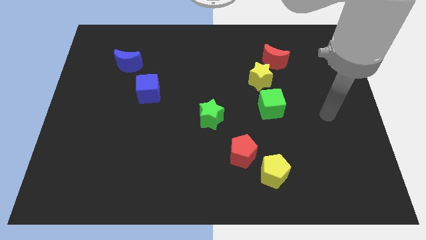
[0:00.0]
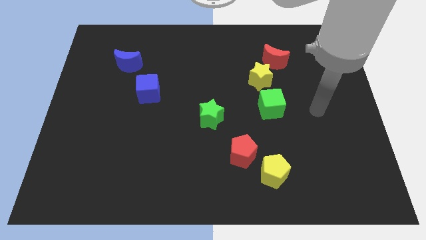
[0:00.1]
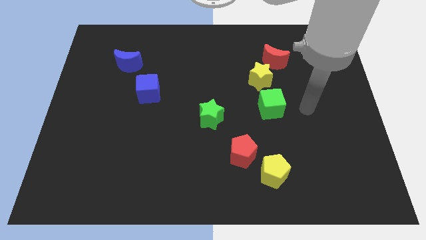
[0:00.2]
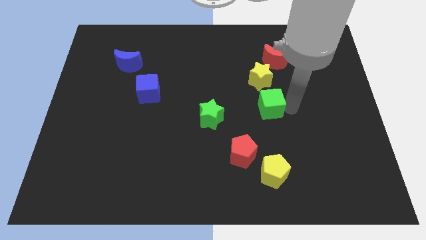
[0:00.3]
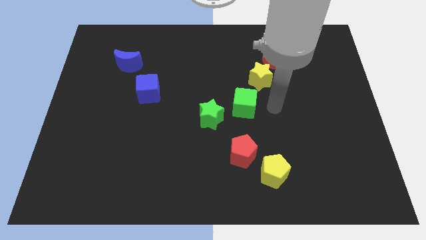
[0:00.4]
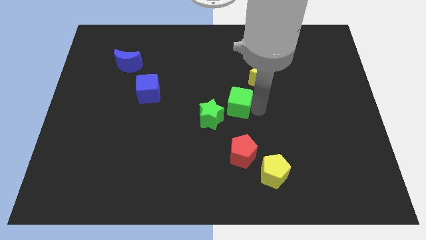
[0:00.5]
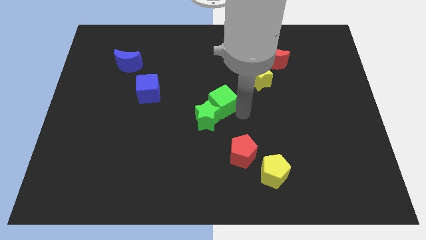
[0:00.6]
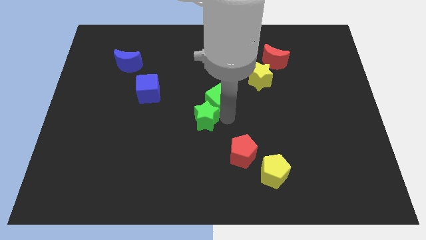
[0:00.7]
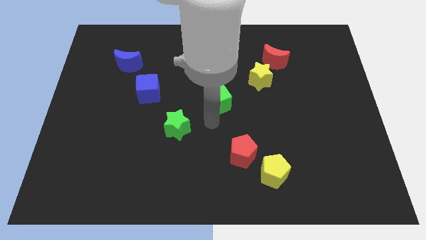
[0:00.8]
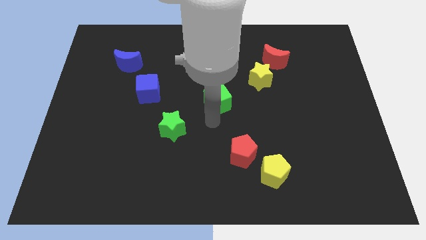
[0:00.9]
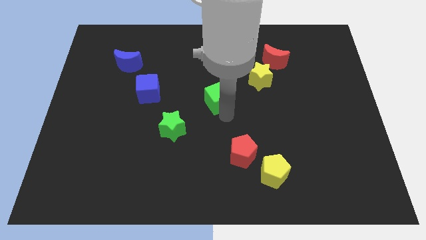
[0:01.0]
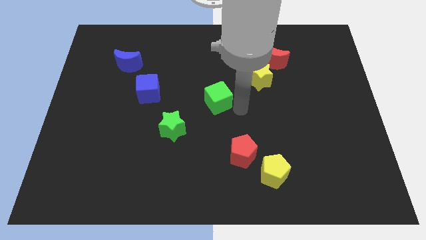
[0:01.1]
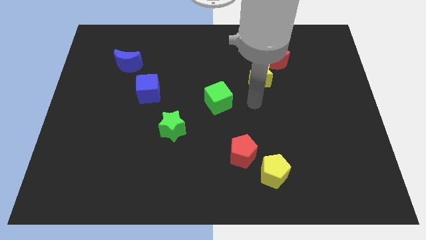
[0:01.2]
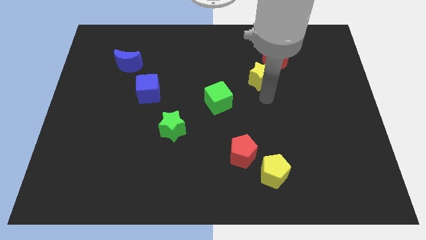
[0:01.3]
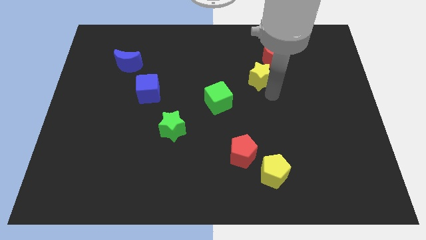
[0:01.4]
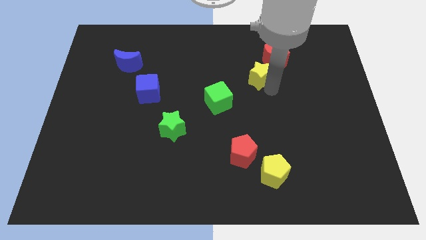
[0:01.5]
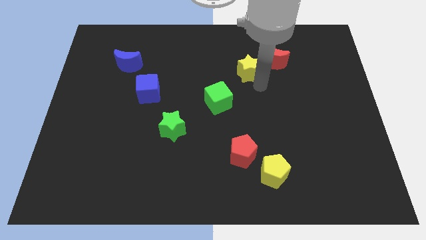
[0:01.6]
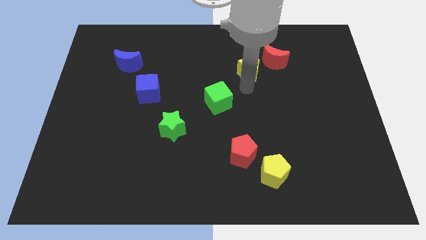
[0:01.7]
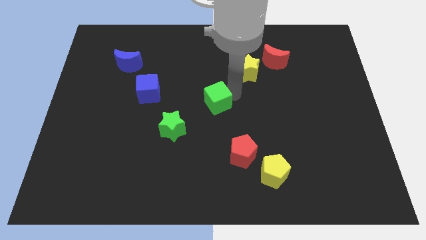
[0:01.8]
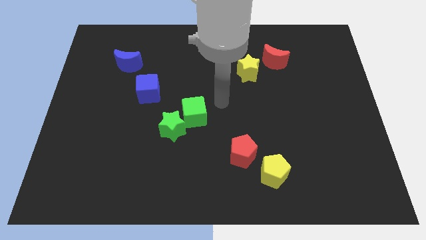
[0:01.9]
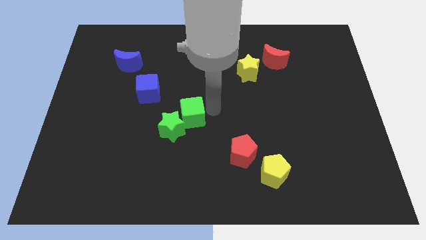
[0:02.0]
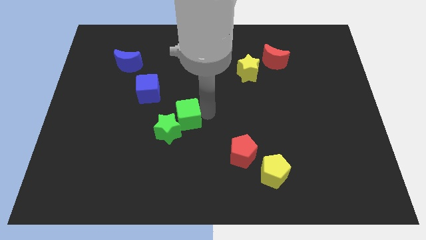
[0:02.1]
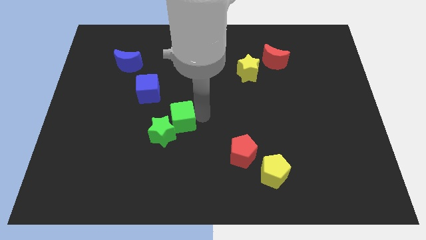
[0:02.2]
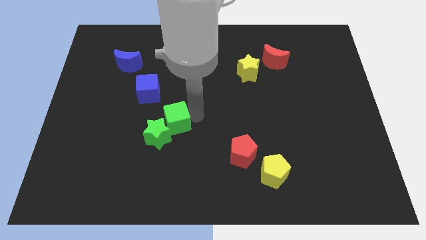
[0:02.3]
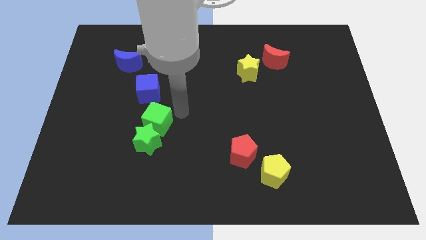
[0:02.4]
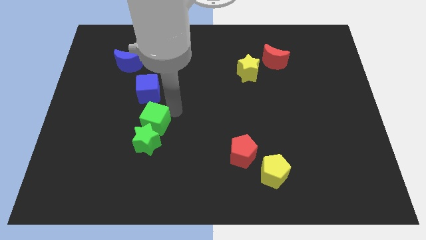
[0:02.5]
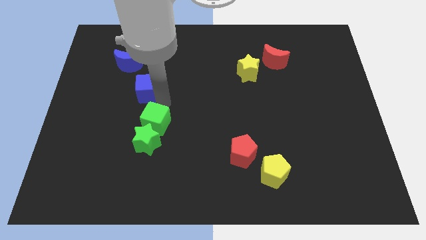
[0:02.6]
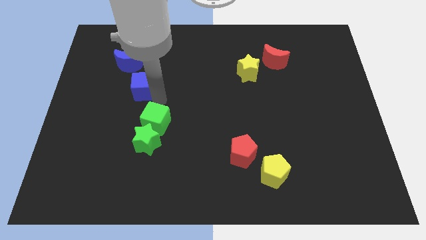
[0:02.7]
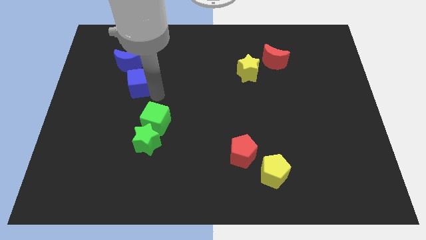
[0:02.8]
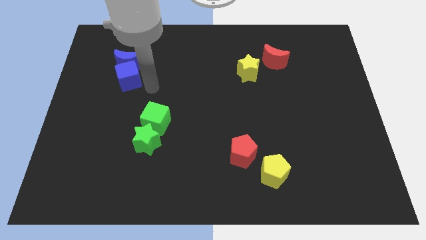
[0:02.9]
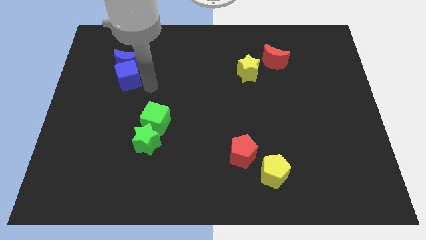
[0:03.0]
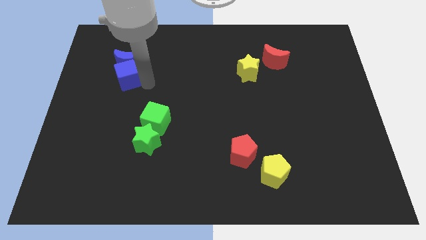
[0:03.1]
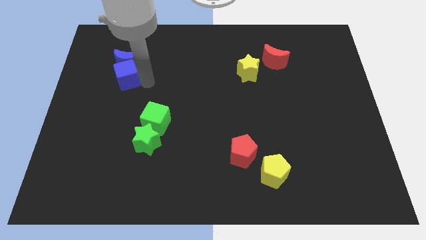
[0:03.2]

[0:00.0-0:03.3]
push the green cube into the green star

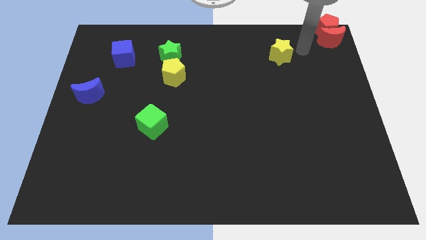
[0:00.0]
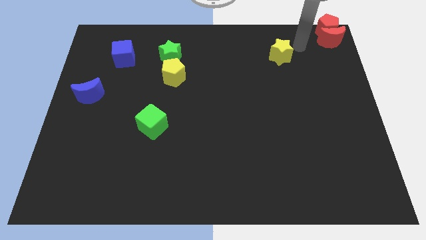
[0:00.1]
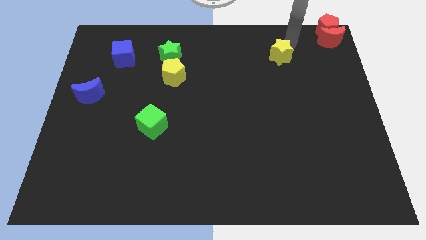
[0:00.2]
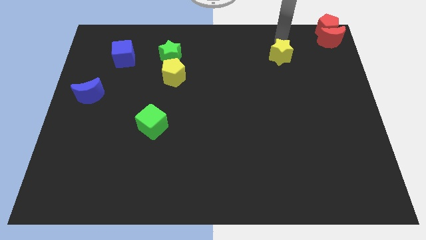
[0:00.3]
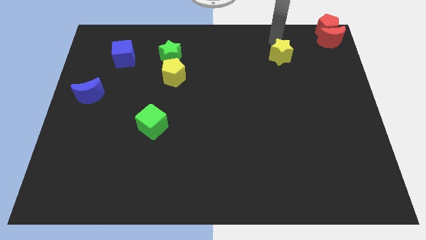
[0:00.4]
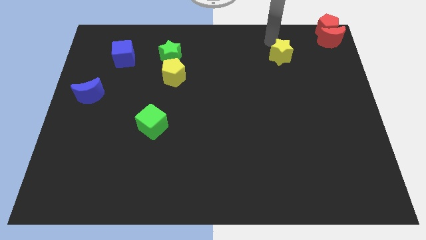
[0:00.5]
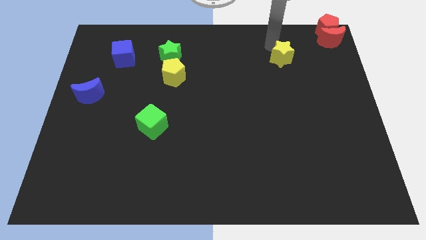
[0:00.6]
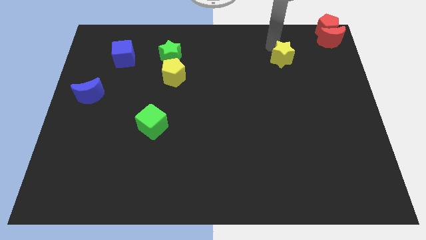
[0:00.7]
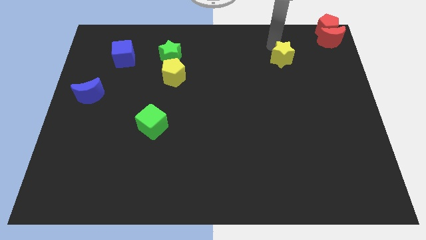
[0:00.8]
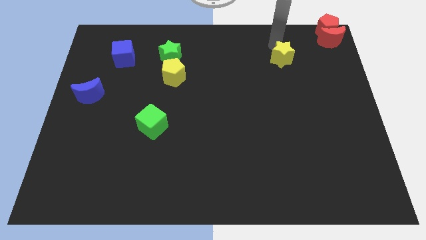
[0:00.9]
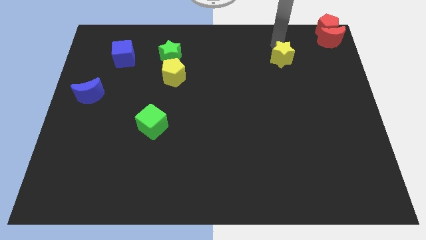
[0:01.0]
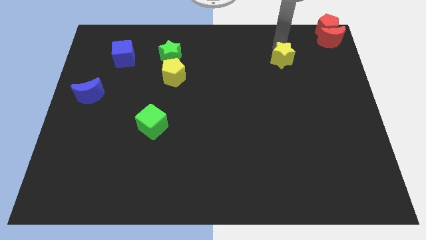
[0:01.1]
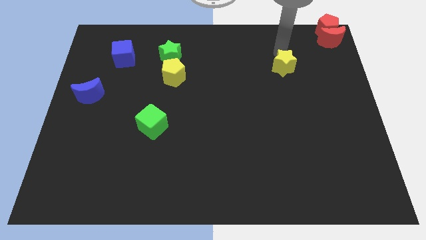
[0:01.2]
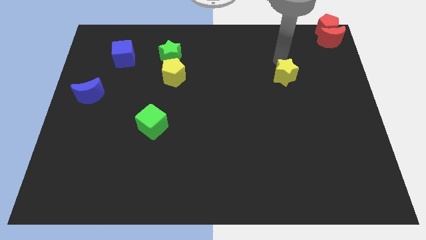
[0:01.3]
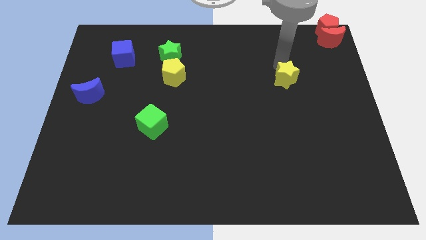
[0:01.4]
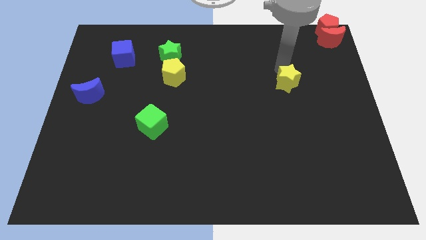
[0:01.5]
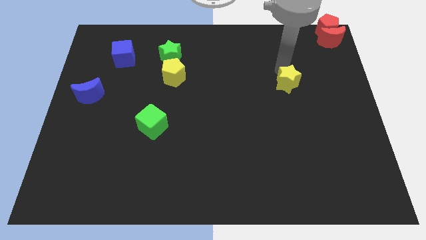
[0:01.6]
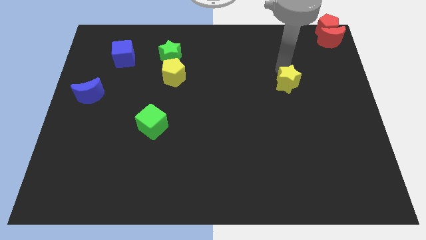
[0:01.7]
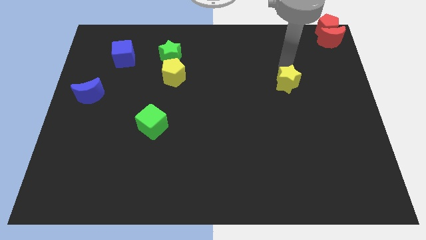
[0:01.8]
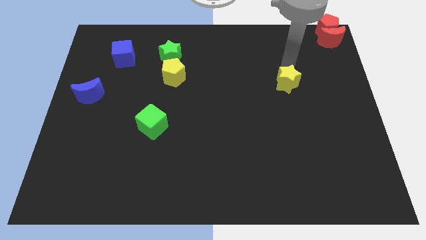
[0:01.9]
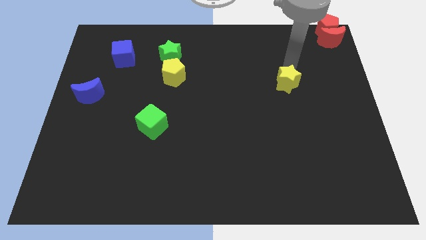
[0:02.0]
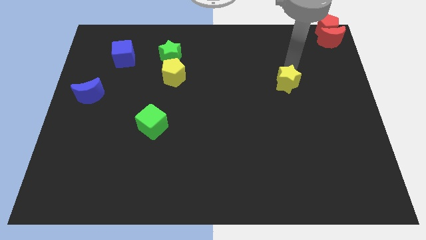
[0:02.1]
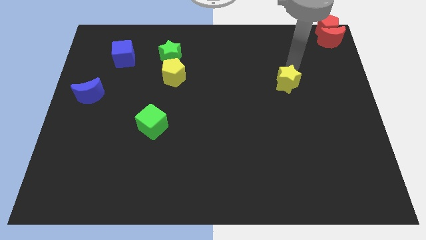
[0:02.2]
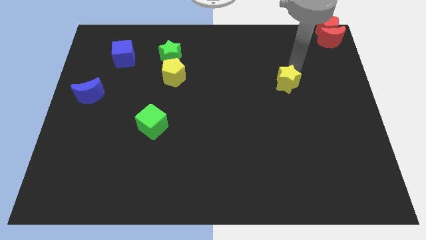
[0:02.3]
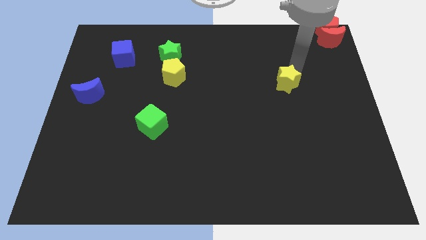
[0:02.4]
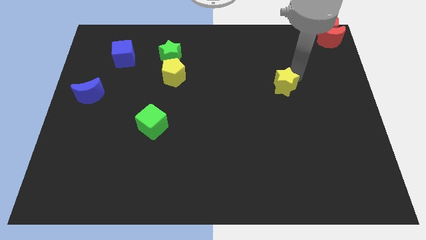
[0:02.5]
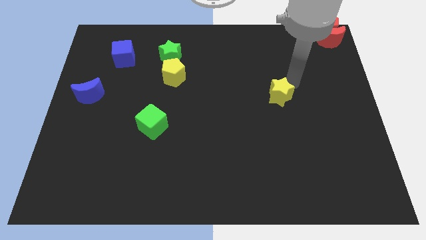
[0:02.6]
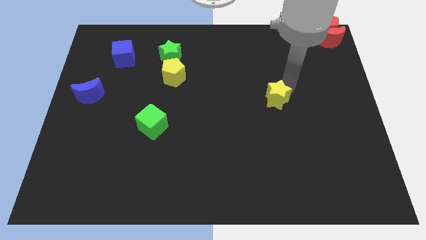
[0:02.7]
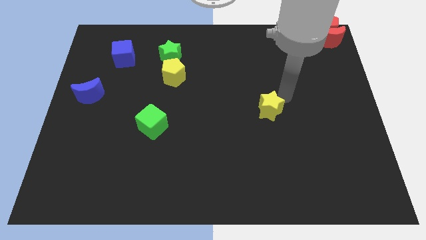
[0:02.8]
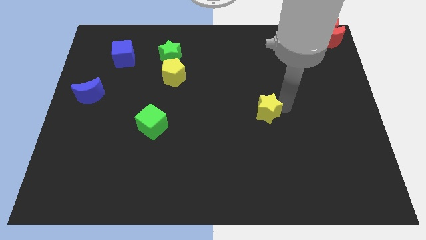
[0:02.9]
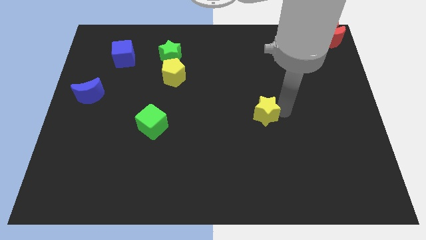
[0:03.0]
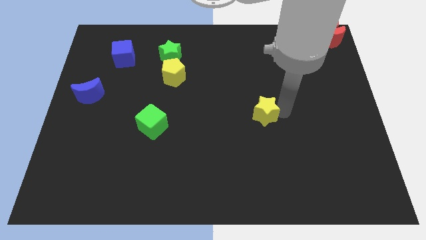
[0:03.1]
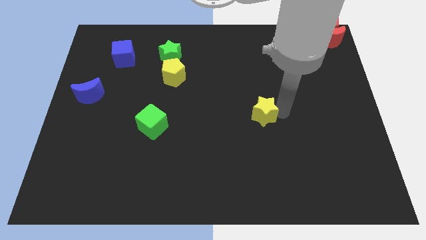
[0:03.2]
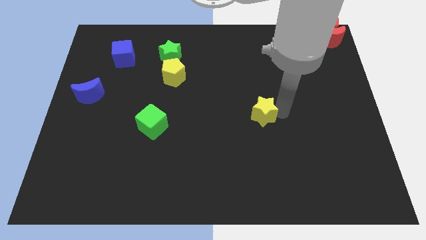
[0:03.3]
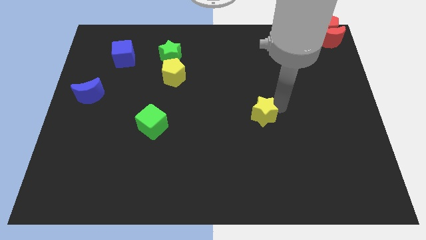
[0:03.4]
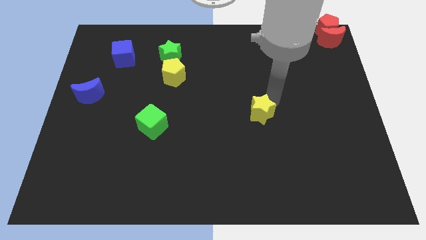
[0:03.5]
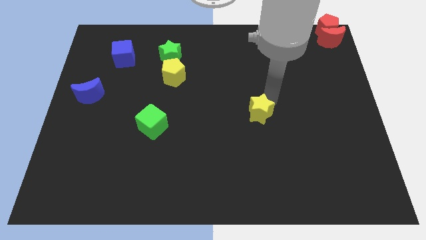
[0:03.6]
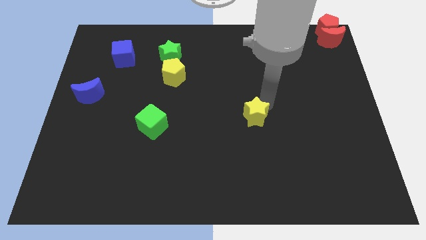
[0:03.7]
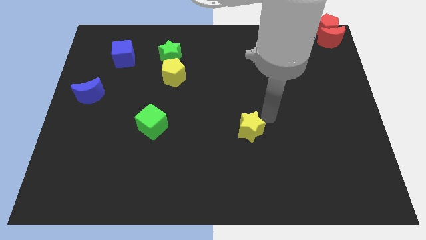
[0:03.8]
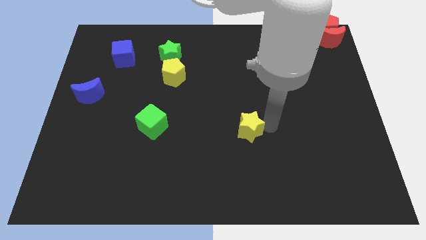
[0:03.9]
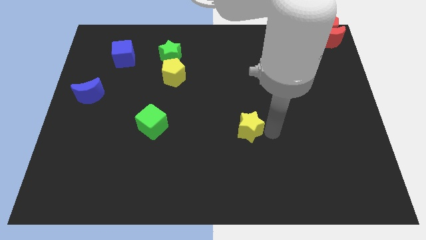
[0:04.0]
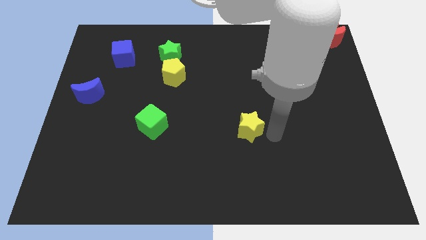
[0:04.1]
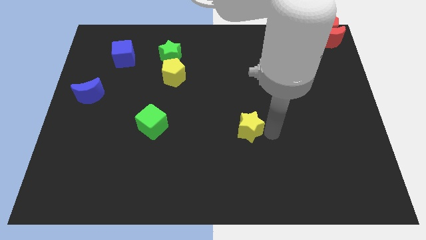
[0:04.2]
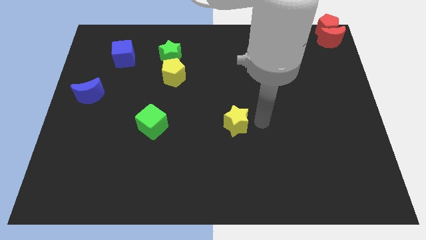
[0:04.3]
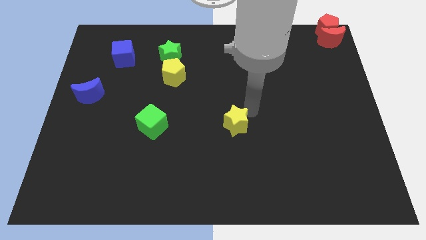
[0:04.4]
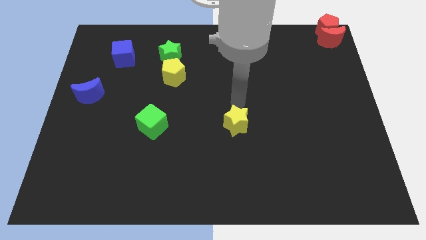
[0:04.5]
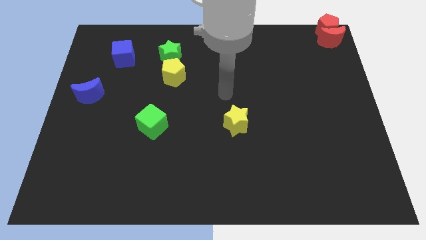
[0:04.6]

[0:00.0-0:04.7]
put the yellow star horizontally right to the green cube

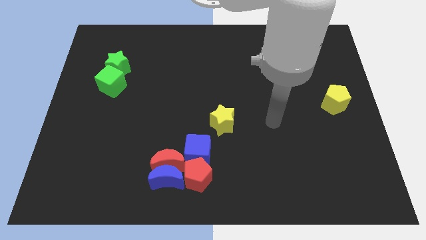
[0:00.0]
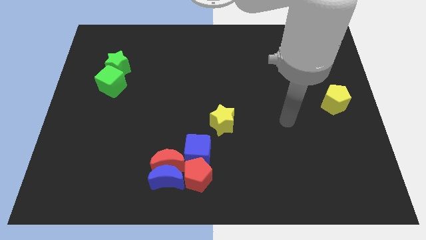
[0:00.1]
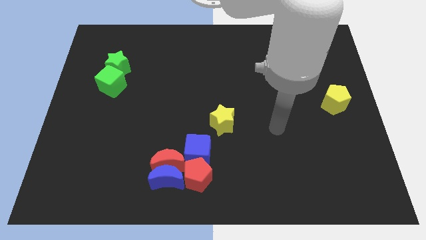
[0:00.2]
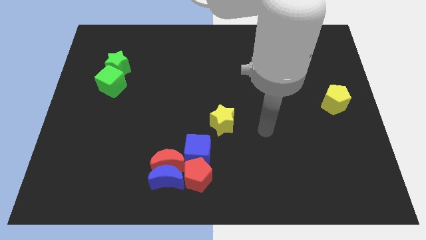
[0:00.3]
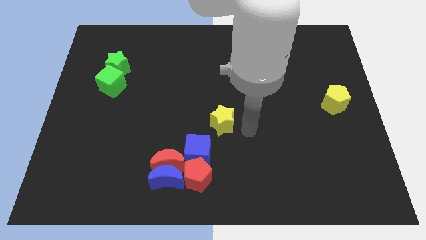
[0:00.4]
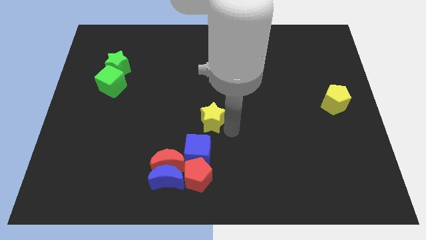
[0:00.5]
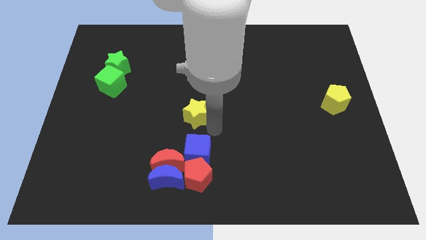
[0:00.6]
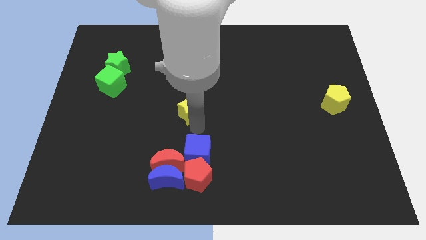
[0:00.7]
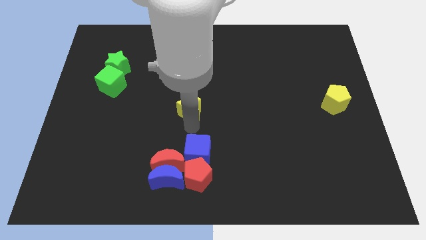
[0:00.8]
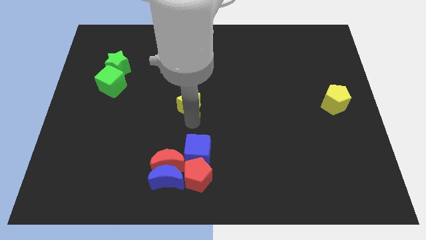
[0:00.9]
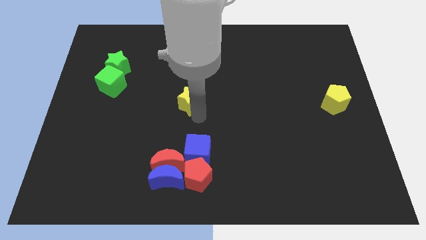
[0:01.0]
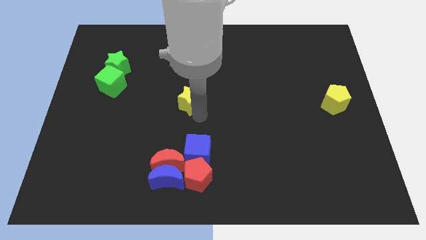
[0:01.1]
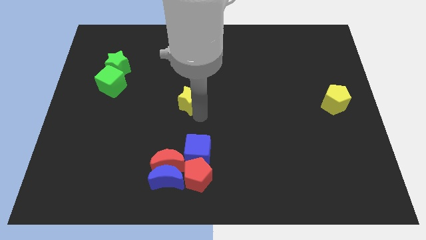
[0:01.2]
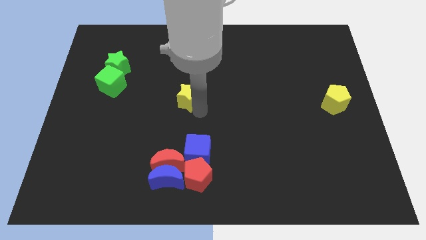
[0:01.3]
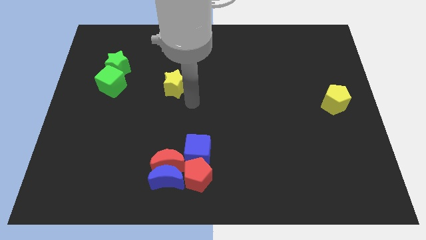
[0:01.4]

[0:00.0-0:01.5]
move the yellow star towards the green cube
